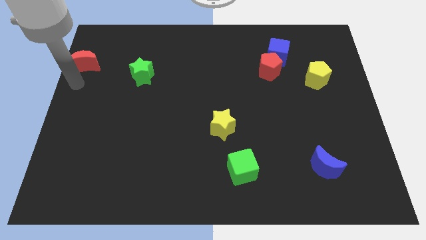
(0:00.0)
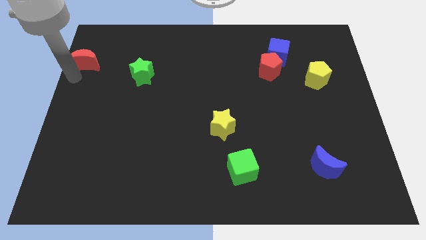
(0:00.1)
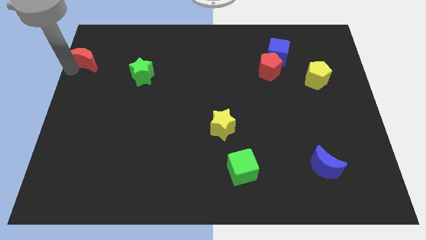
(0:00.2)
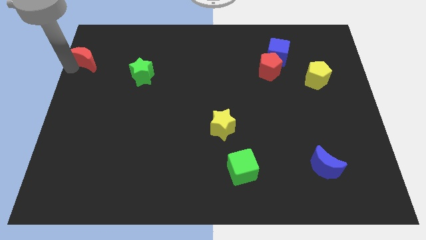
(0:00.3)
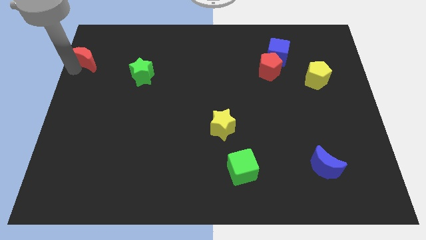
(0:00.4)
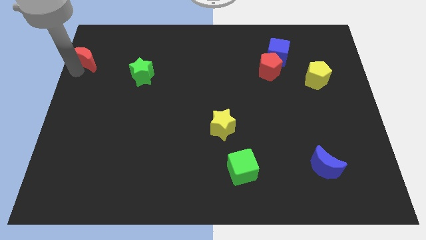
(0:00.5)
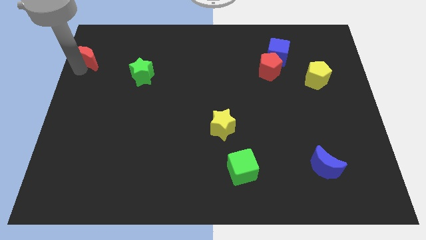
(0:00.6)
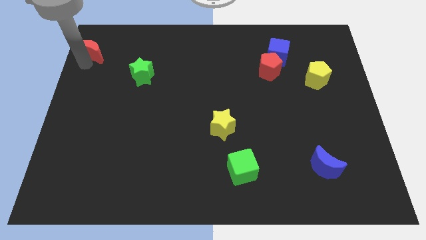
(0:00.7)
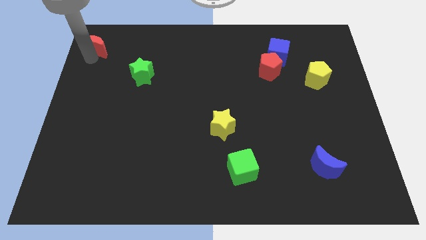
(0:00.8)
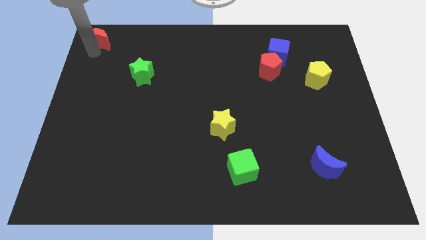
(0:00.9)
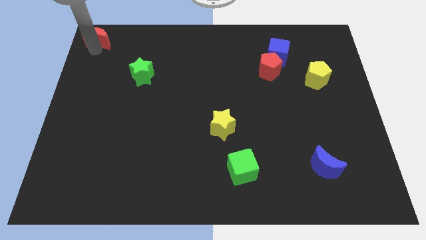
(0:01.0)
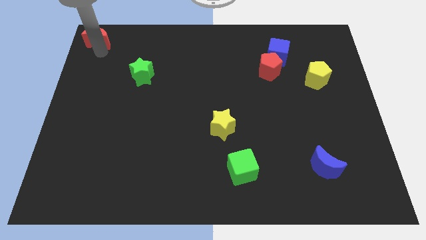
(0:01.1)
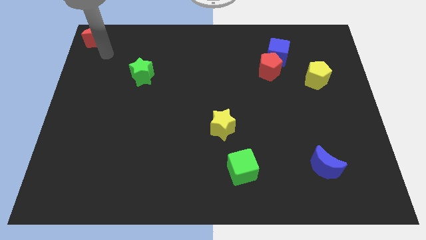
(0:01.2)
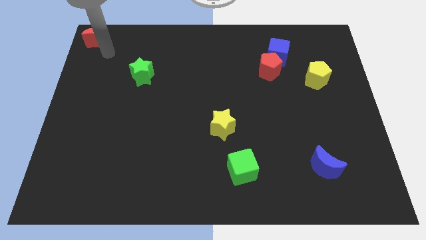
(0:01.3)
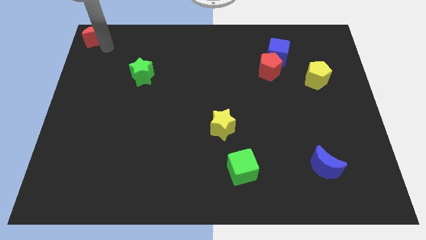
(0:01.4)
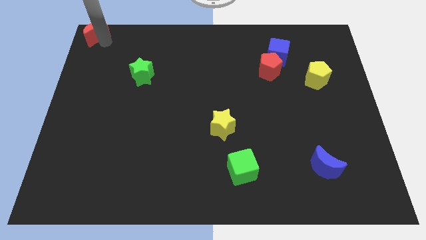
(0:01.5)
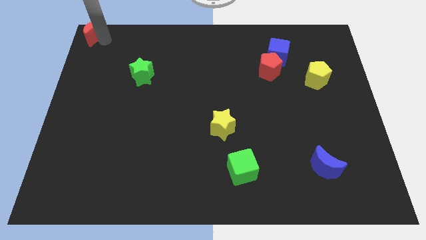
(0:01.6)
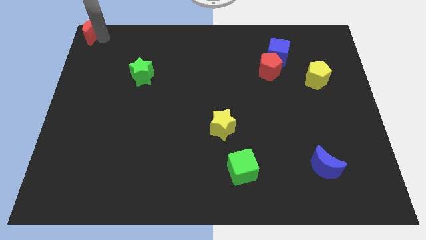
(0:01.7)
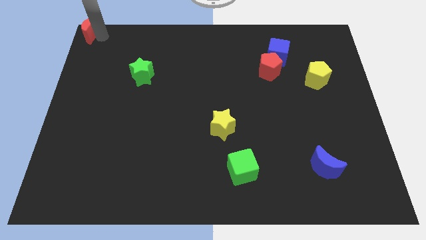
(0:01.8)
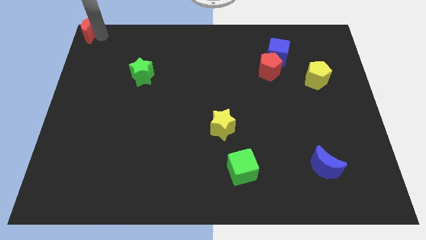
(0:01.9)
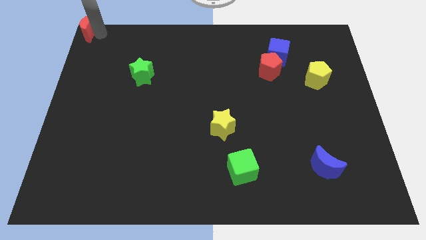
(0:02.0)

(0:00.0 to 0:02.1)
push the red crescent to the top left of the board

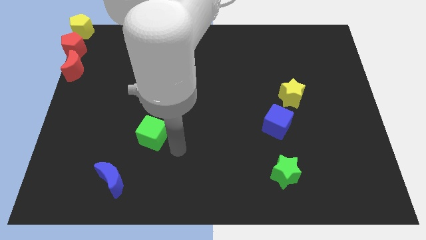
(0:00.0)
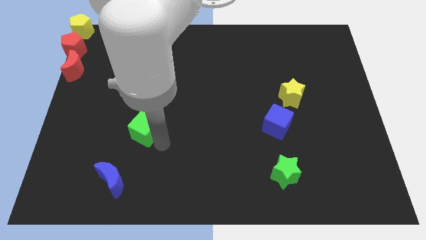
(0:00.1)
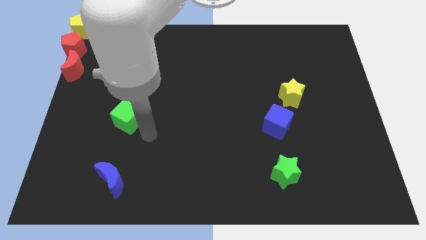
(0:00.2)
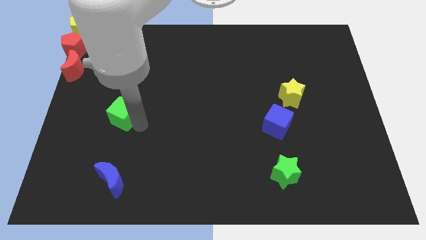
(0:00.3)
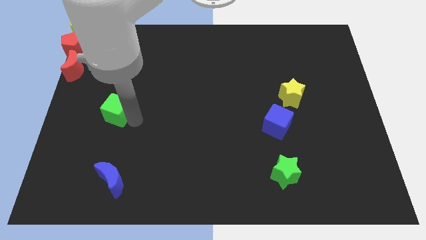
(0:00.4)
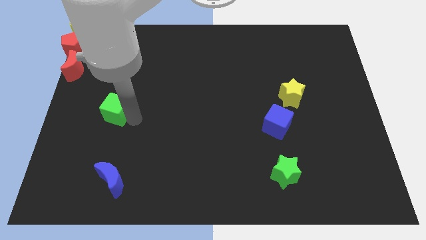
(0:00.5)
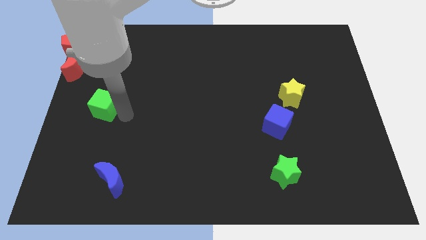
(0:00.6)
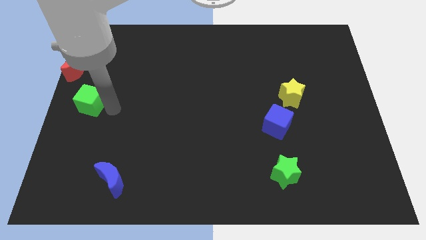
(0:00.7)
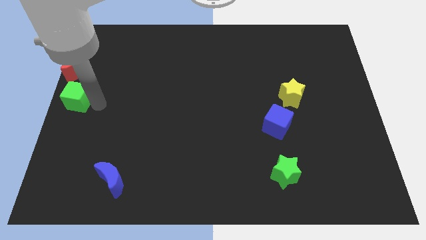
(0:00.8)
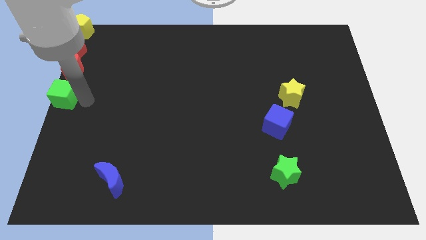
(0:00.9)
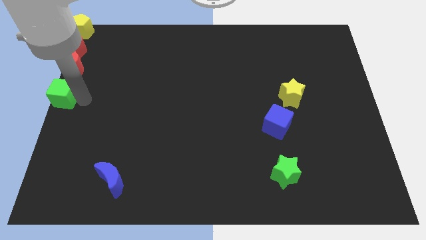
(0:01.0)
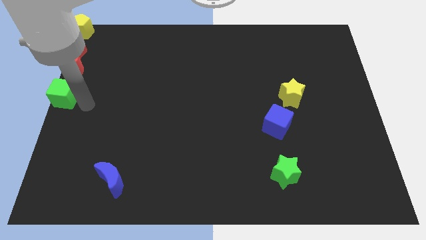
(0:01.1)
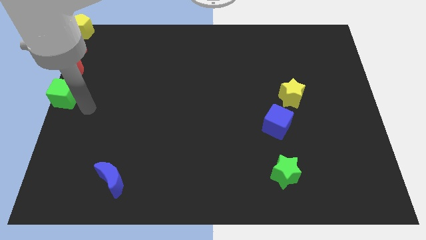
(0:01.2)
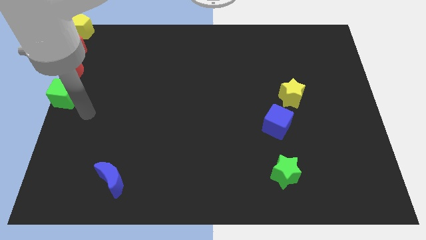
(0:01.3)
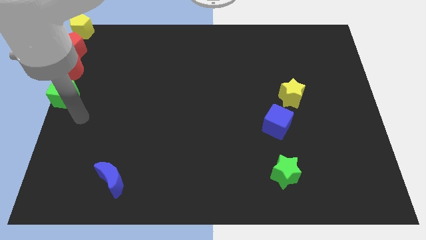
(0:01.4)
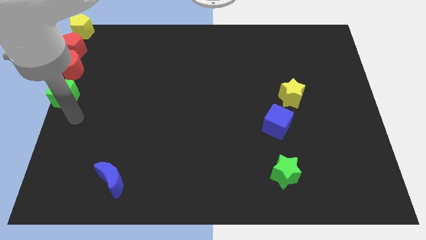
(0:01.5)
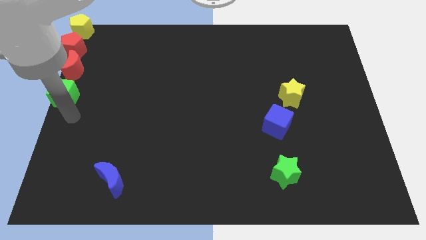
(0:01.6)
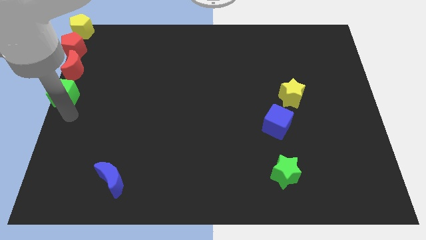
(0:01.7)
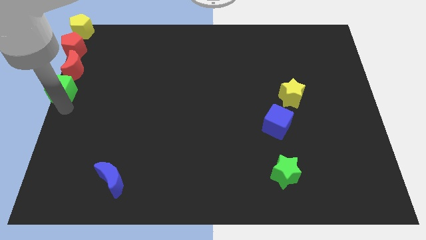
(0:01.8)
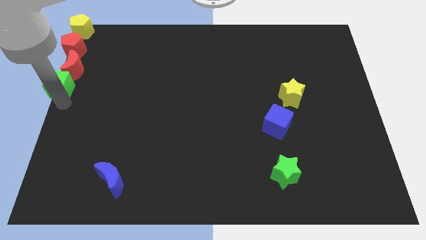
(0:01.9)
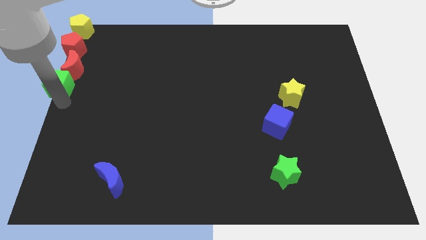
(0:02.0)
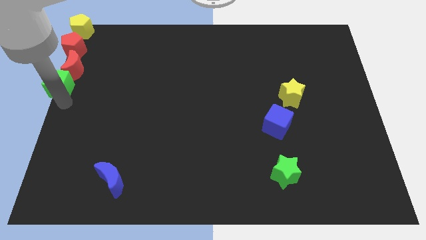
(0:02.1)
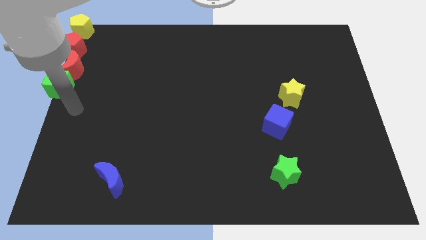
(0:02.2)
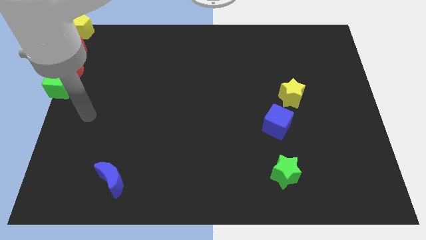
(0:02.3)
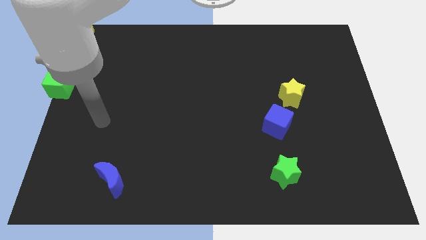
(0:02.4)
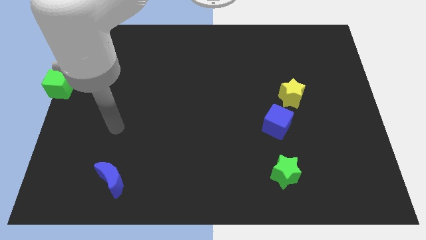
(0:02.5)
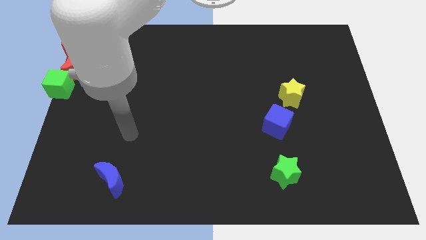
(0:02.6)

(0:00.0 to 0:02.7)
move the green cube below the red crescent

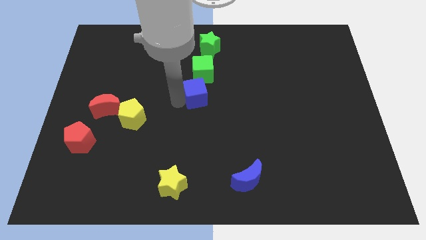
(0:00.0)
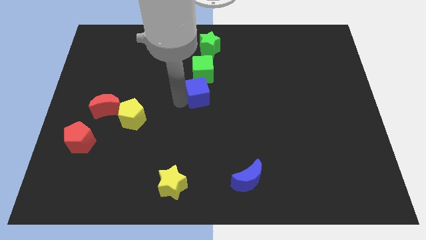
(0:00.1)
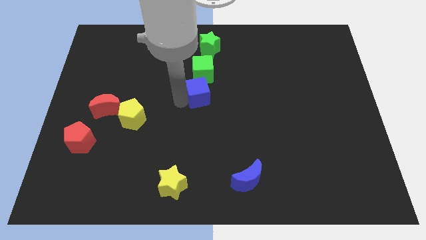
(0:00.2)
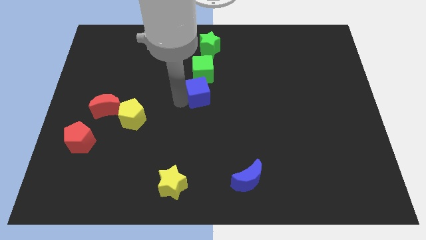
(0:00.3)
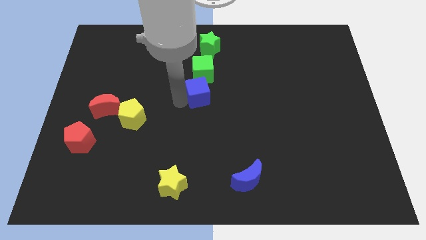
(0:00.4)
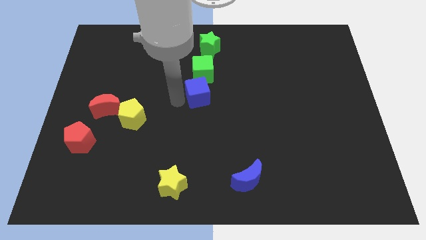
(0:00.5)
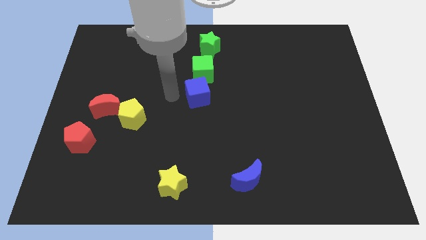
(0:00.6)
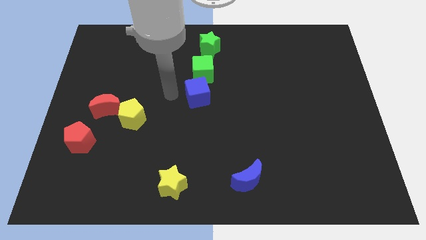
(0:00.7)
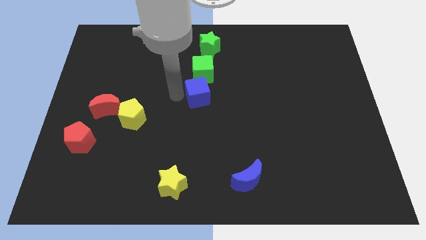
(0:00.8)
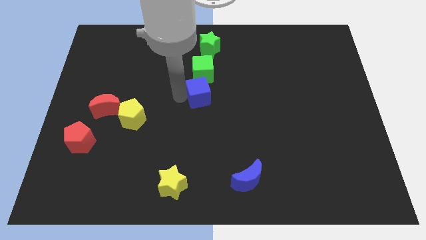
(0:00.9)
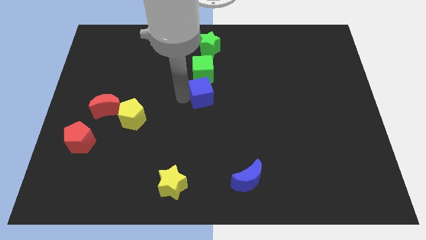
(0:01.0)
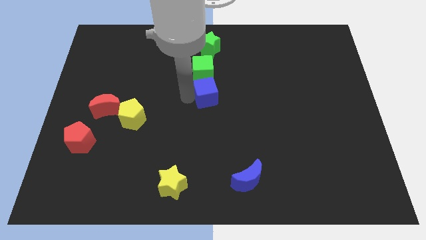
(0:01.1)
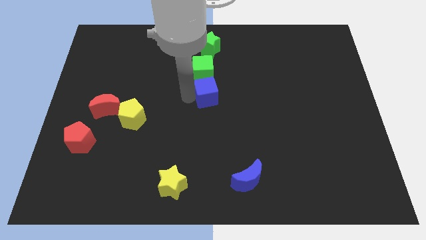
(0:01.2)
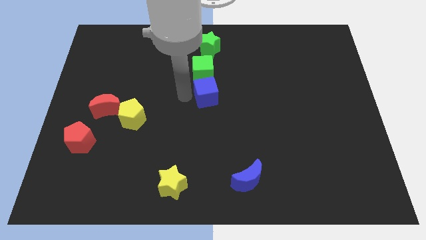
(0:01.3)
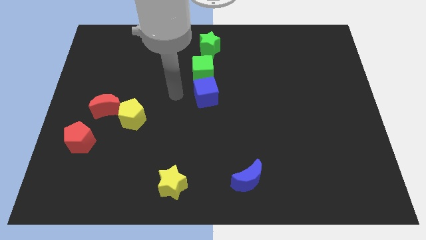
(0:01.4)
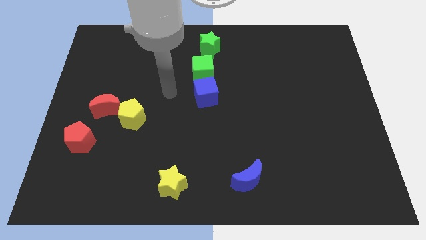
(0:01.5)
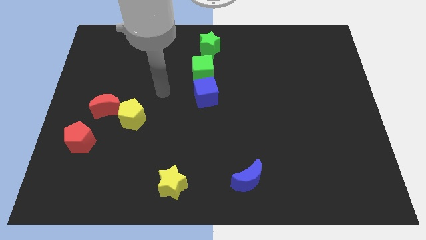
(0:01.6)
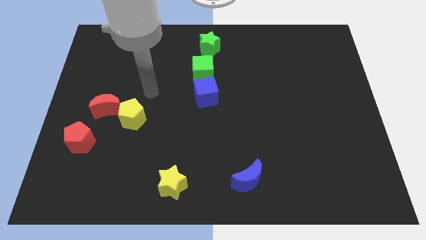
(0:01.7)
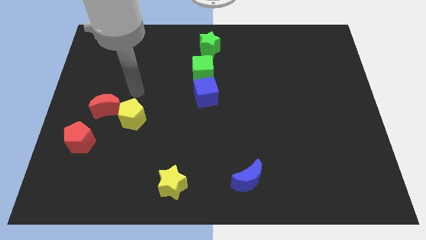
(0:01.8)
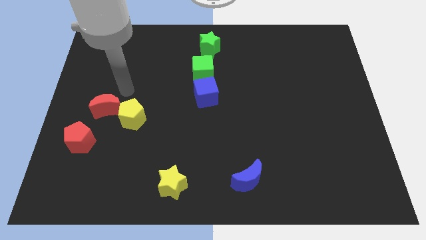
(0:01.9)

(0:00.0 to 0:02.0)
move your arm away from the blue cube

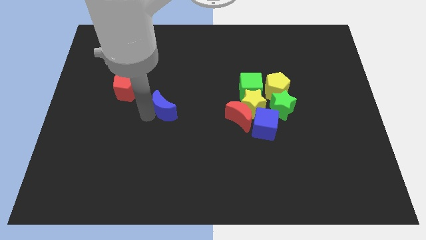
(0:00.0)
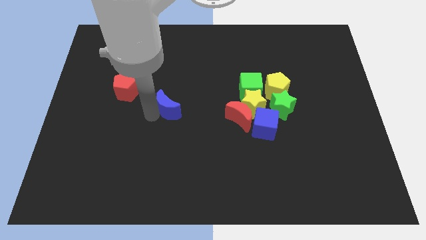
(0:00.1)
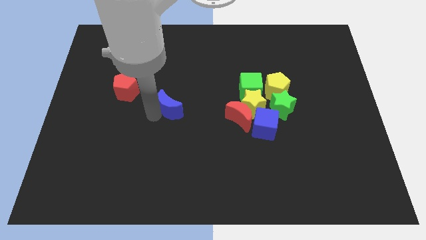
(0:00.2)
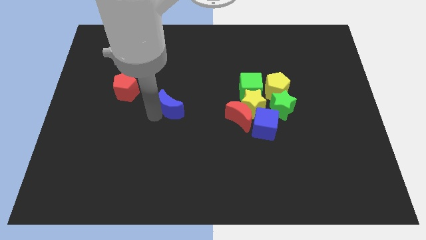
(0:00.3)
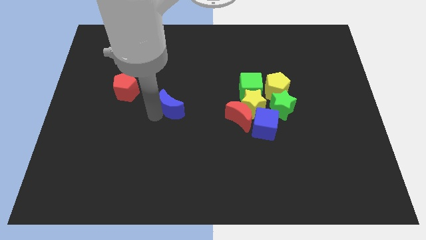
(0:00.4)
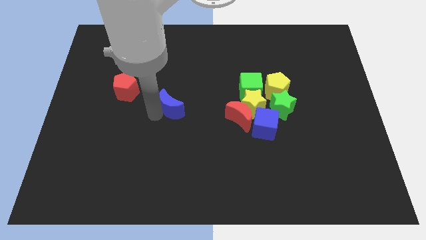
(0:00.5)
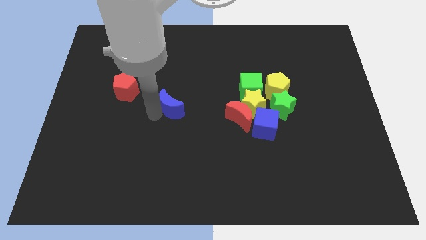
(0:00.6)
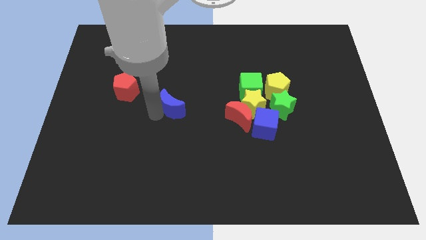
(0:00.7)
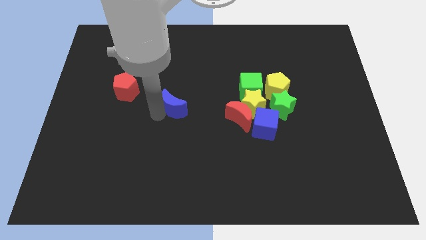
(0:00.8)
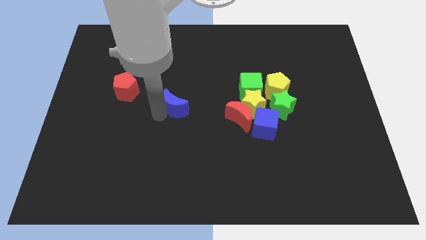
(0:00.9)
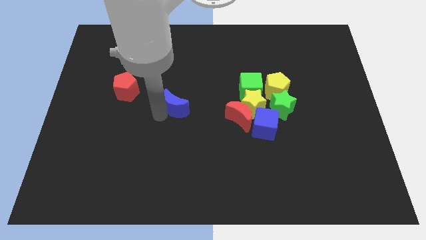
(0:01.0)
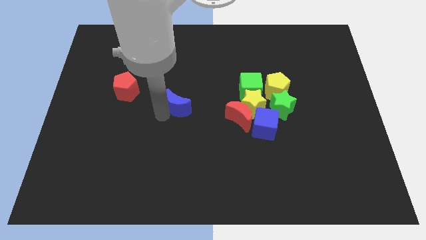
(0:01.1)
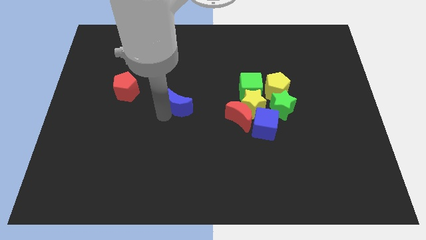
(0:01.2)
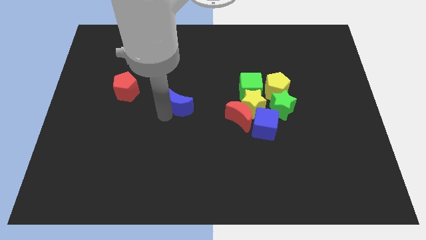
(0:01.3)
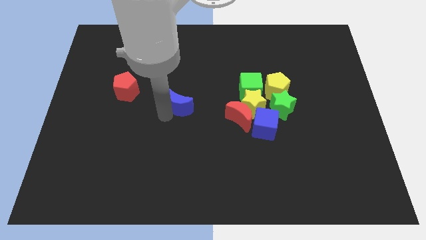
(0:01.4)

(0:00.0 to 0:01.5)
move the blue moon slightly right of the board

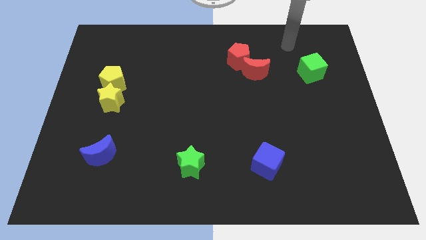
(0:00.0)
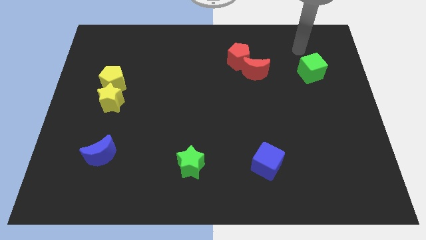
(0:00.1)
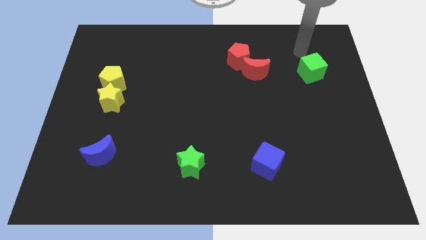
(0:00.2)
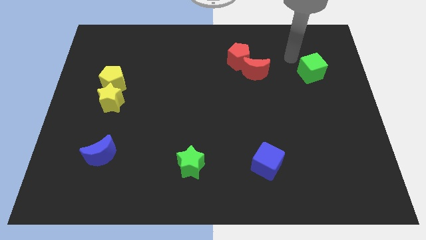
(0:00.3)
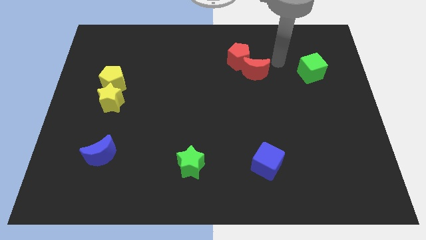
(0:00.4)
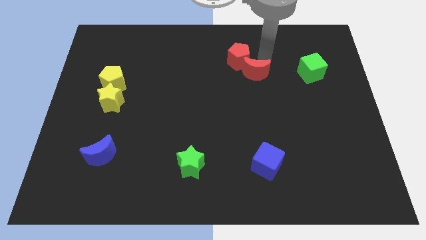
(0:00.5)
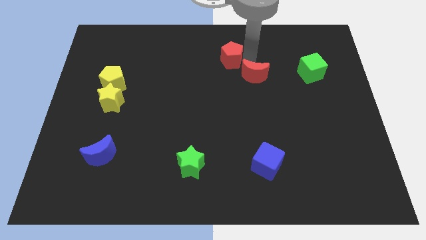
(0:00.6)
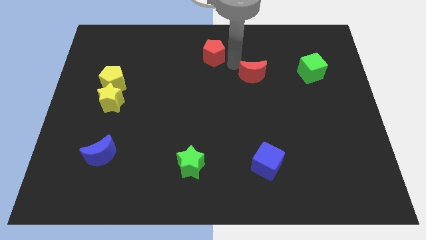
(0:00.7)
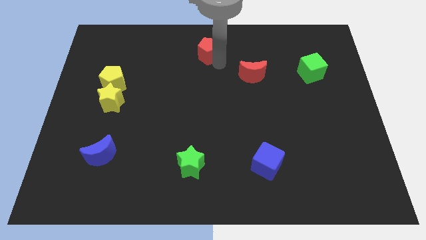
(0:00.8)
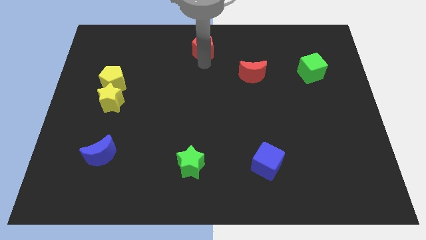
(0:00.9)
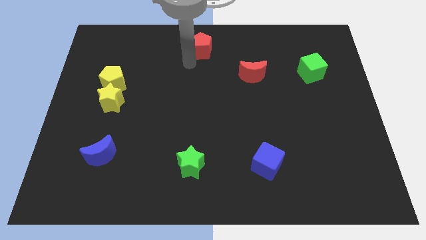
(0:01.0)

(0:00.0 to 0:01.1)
separate the red pentagon from red crescent
